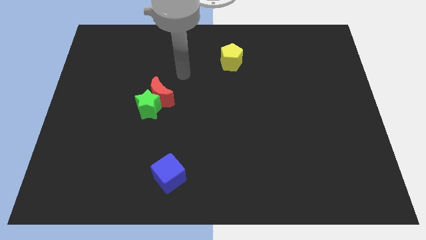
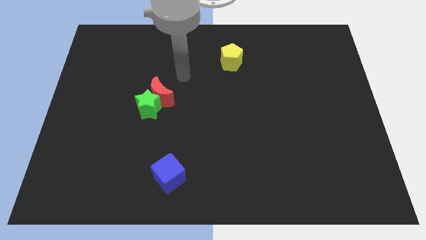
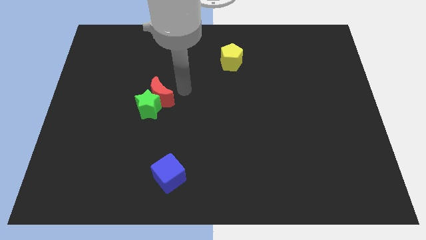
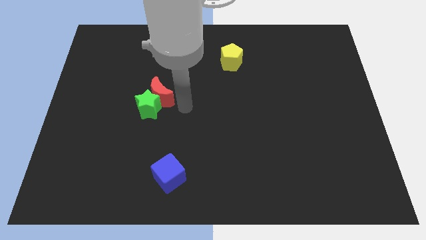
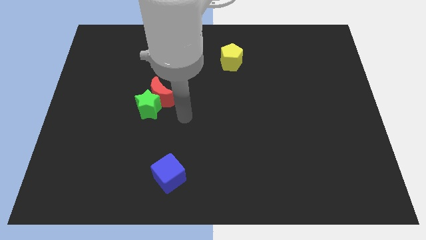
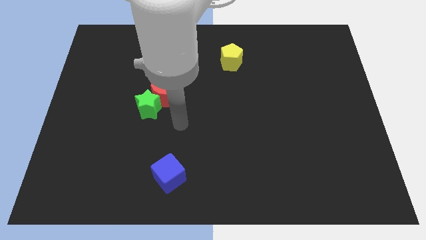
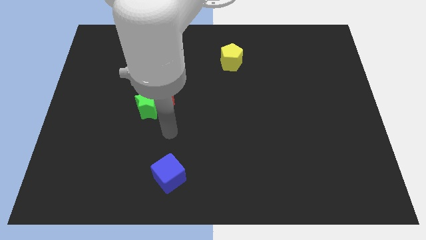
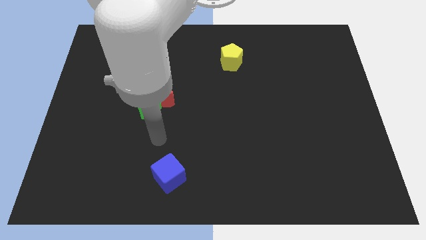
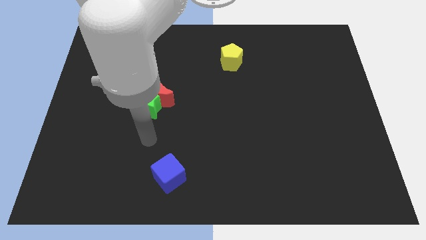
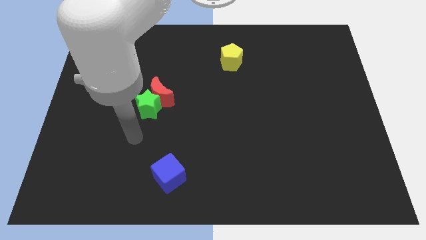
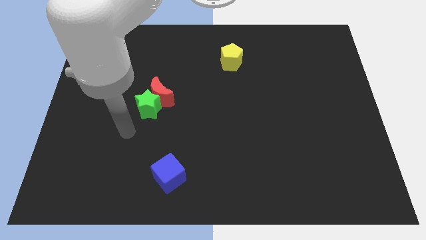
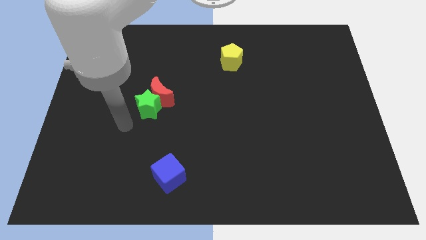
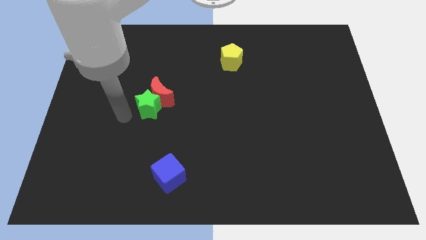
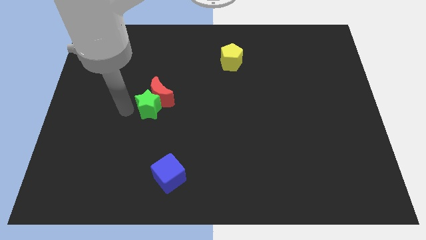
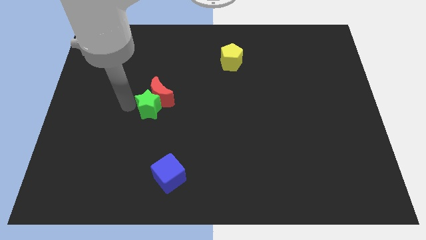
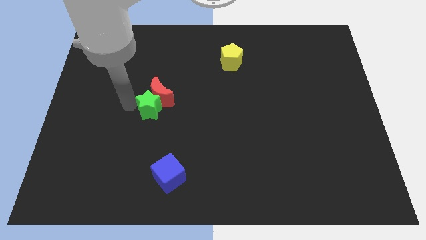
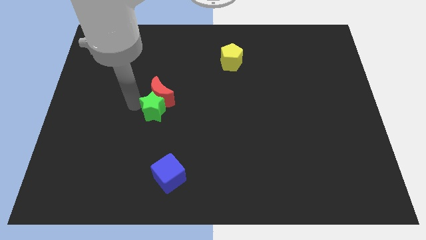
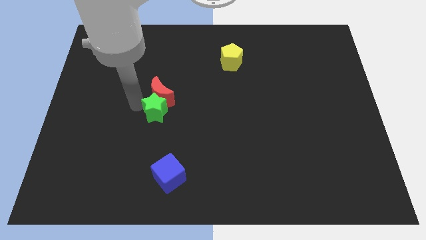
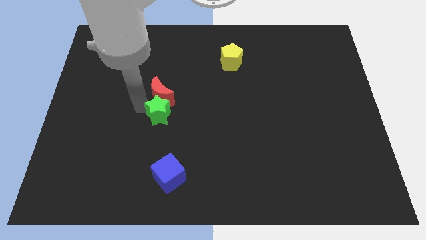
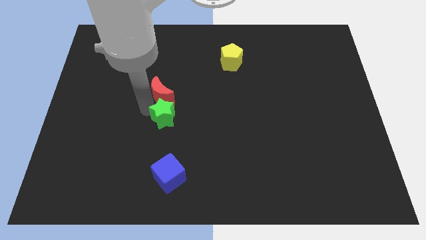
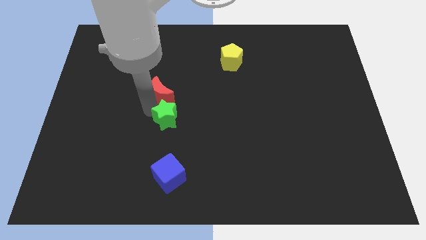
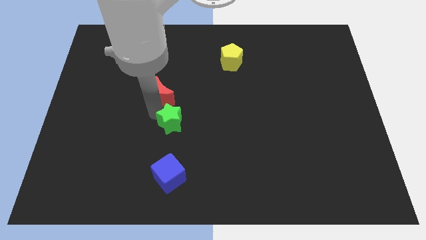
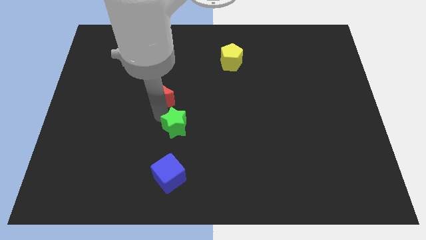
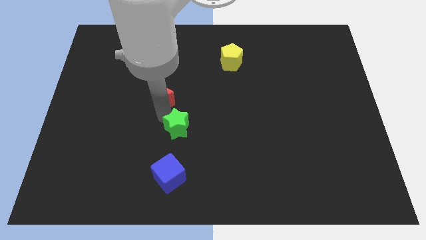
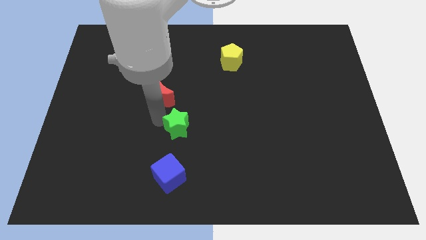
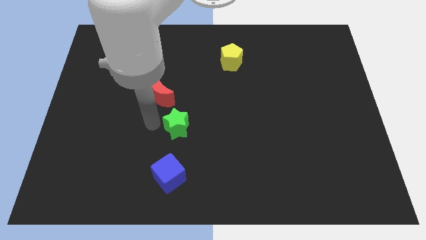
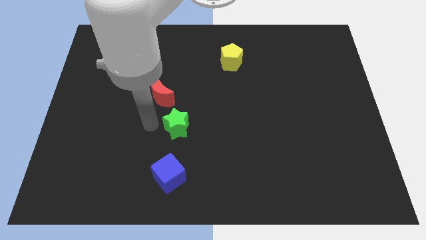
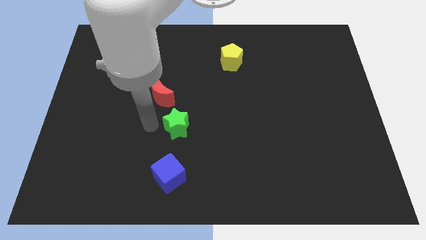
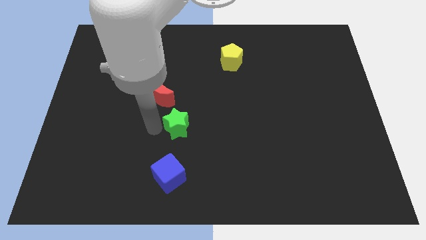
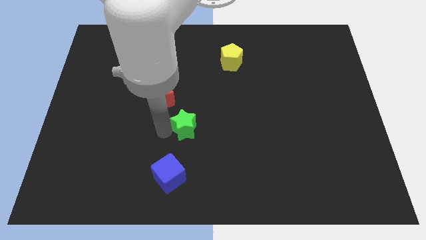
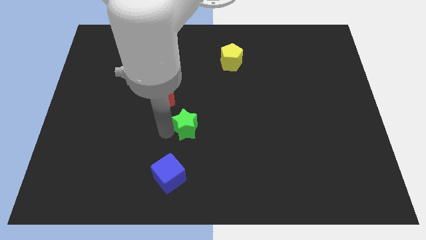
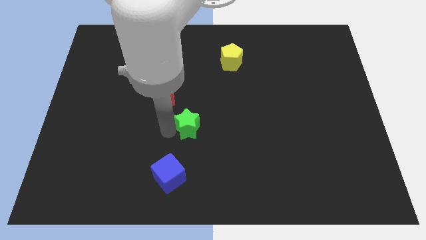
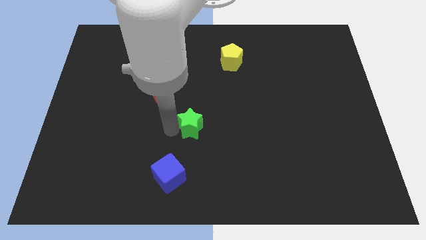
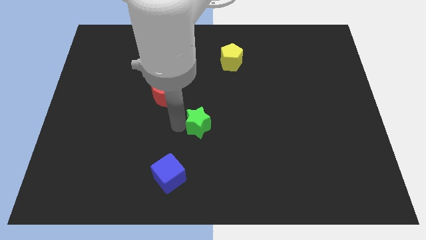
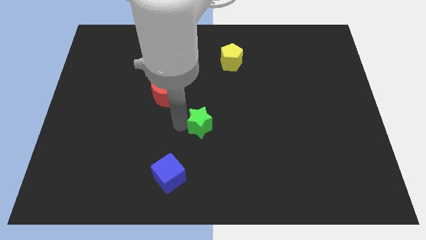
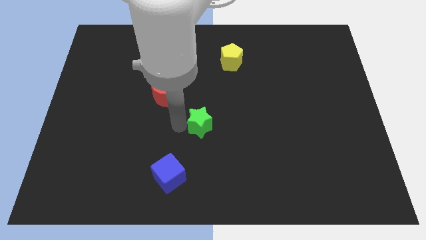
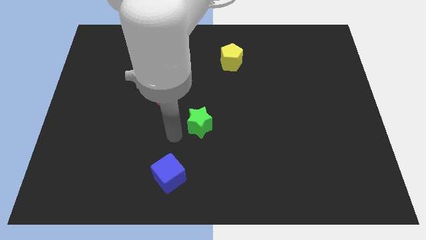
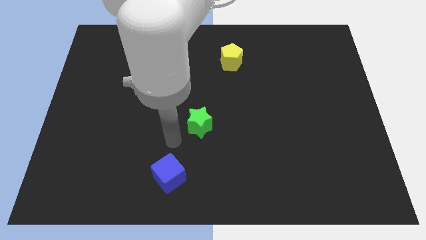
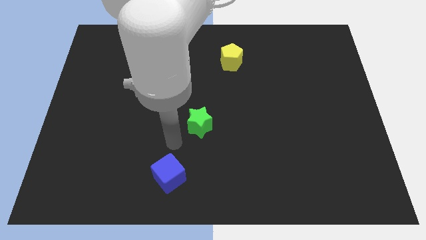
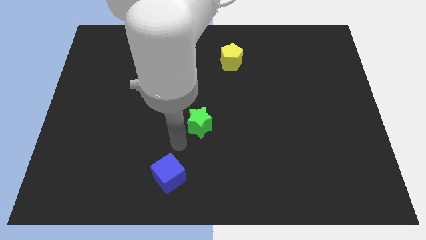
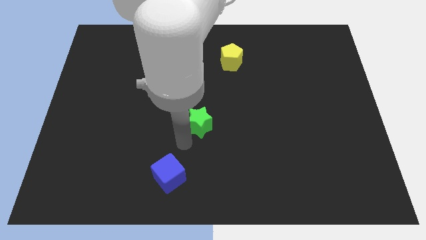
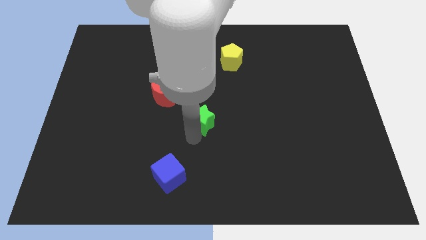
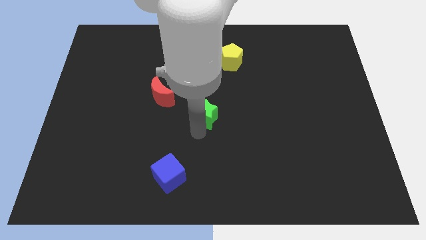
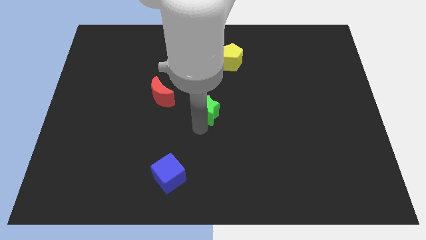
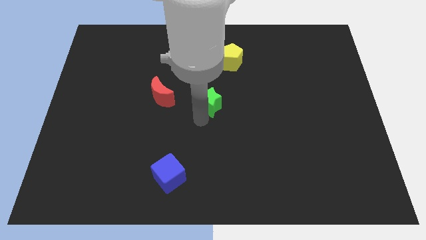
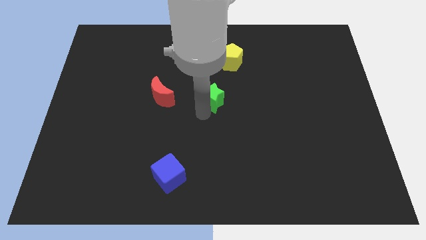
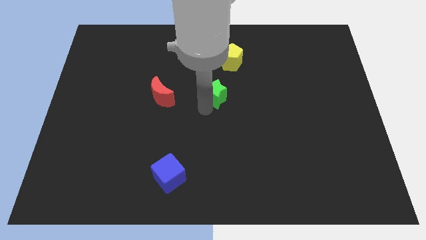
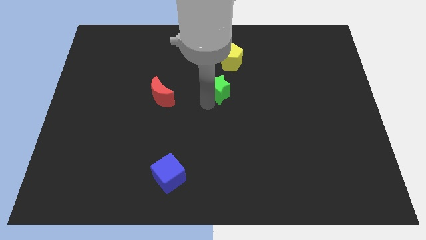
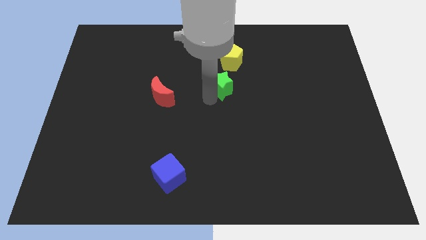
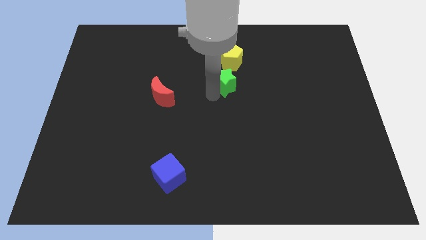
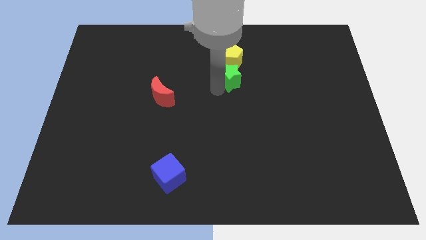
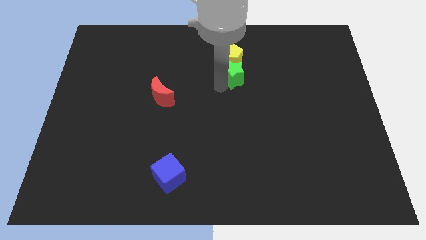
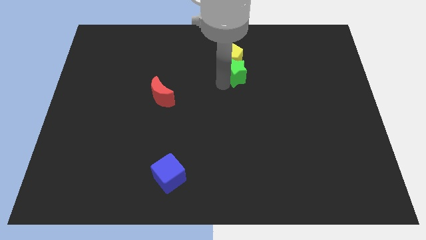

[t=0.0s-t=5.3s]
put the green block next to the pentagon

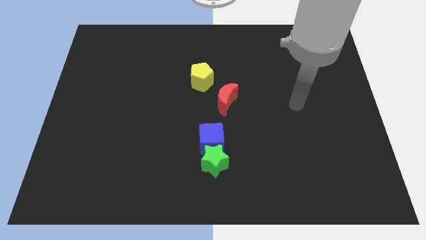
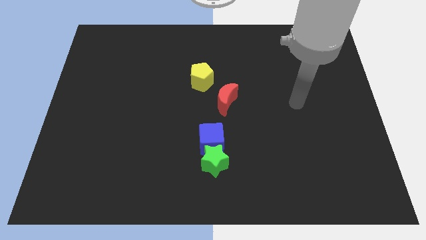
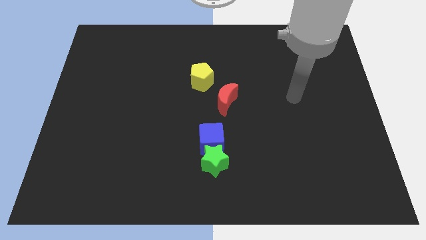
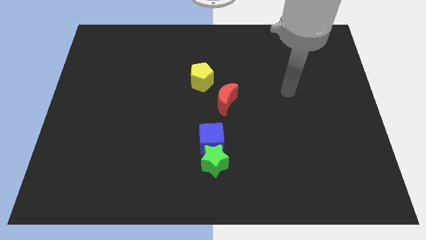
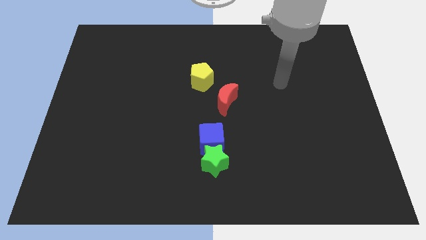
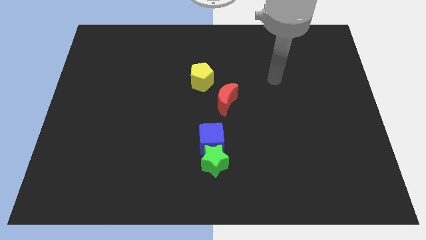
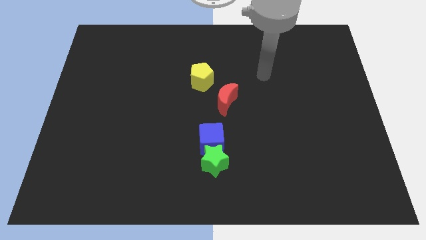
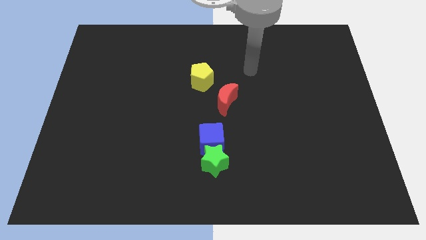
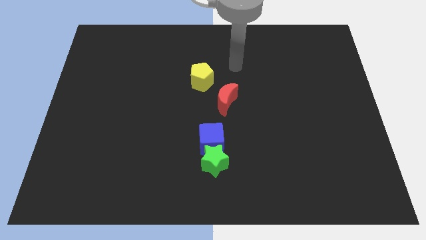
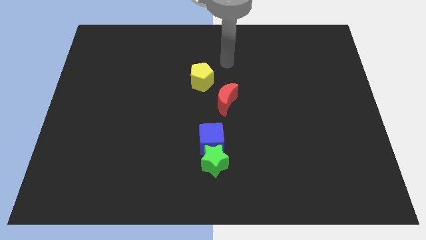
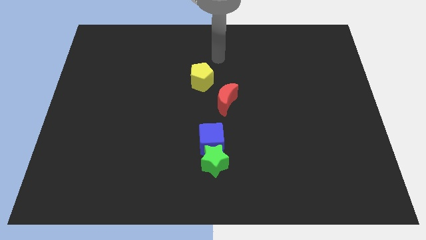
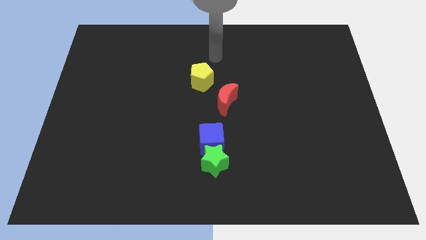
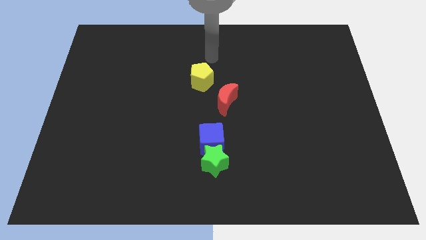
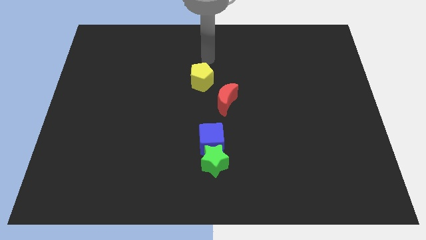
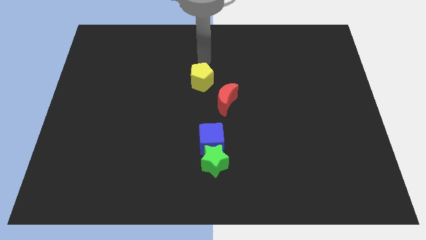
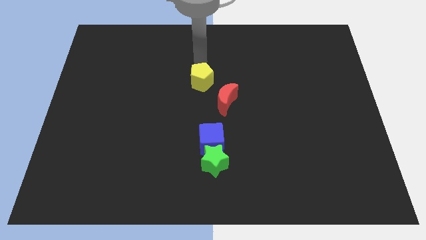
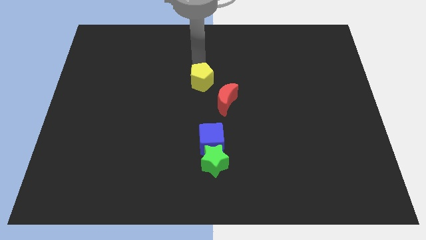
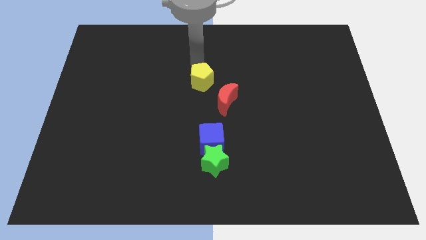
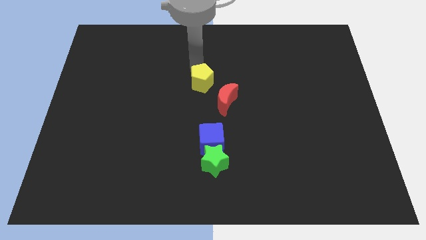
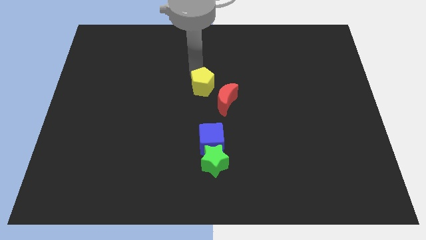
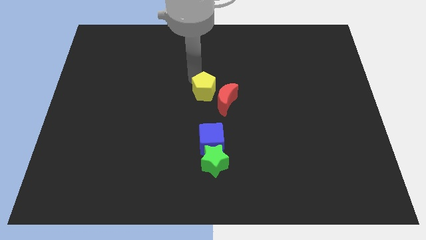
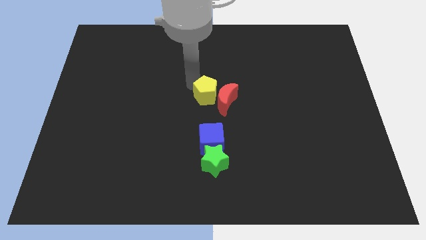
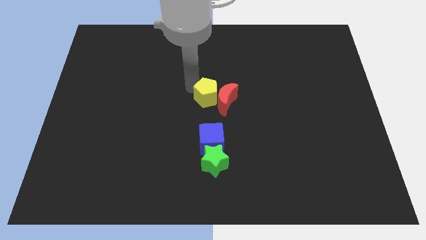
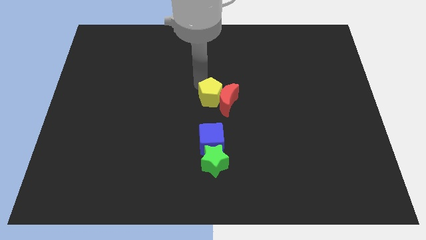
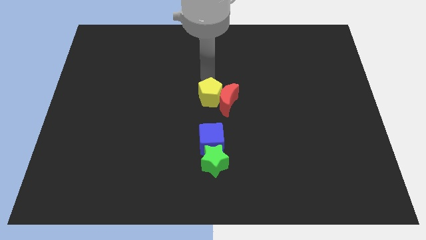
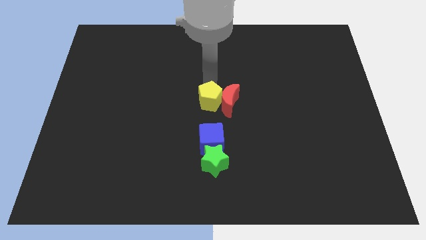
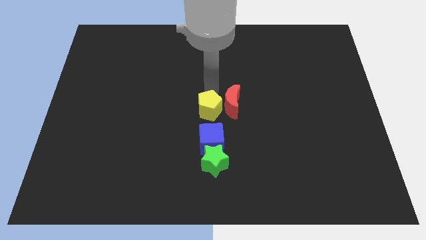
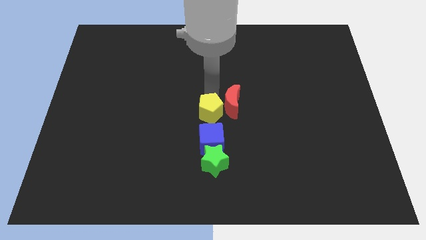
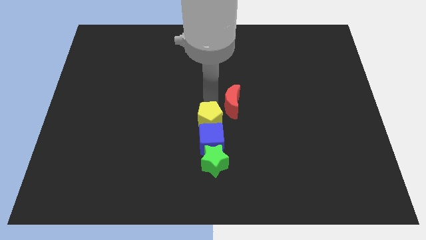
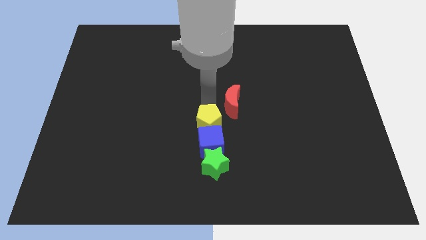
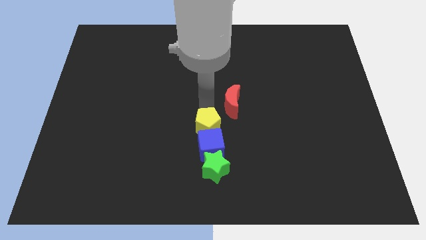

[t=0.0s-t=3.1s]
slide the pentagon close to the cube
